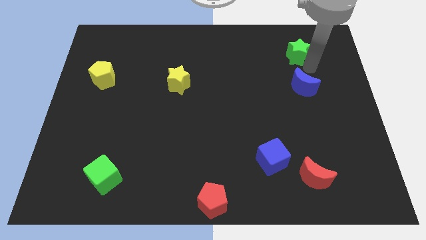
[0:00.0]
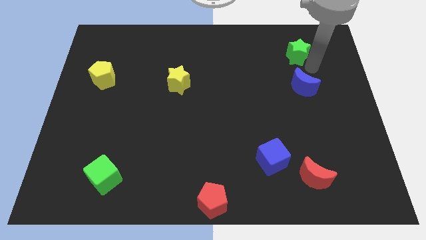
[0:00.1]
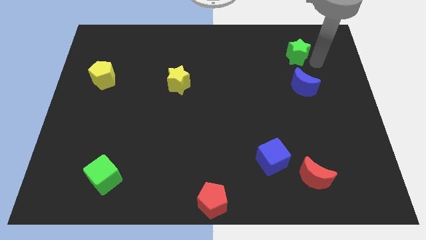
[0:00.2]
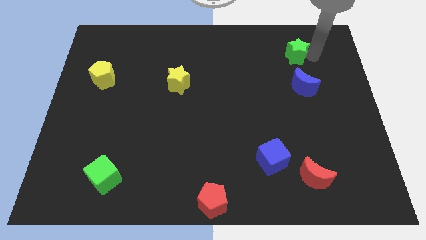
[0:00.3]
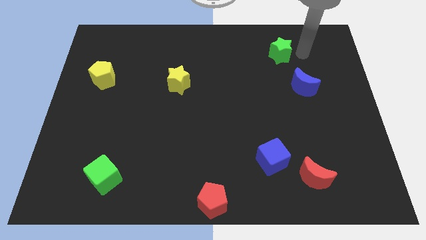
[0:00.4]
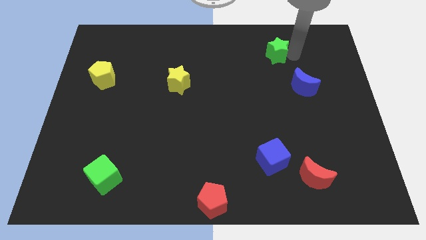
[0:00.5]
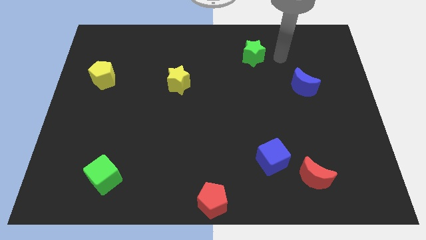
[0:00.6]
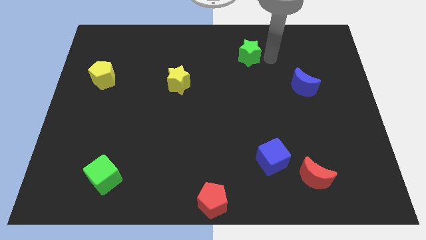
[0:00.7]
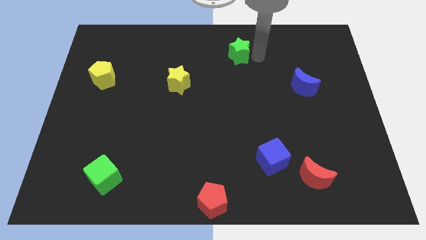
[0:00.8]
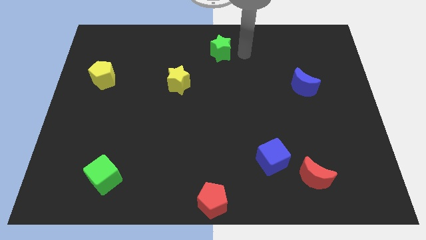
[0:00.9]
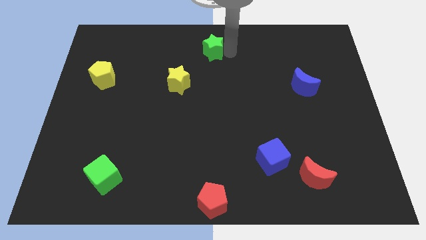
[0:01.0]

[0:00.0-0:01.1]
drag the green star to the top center of the table

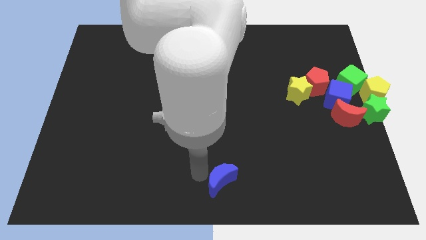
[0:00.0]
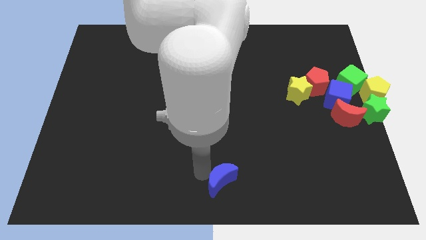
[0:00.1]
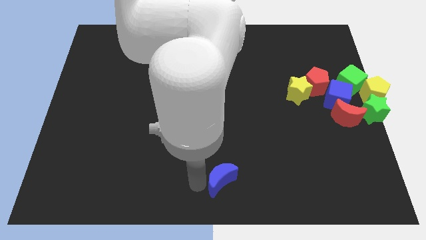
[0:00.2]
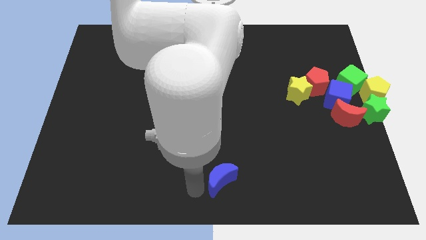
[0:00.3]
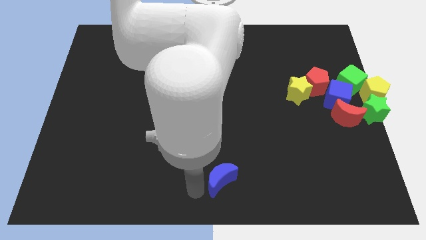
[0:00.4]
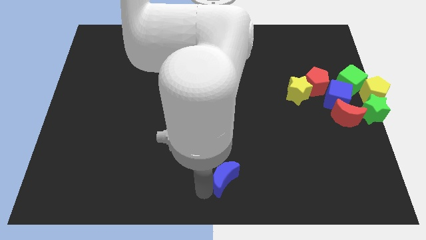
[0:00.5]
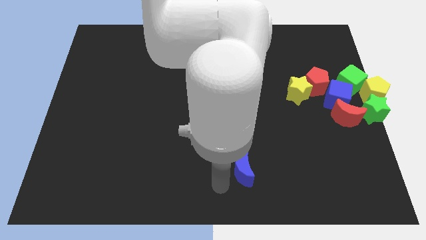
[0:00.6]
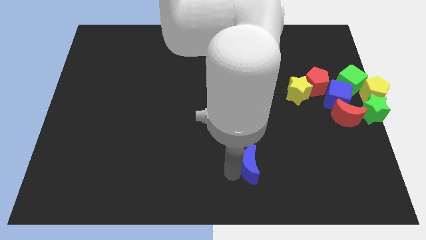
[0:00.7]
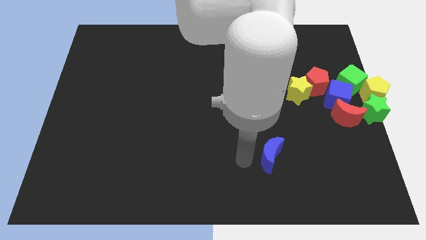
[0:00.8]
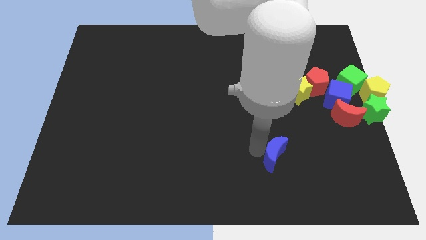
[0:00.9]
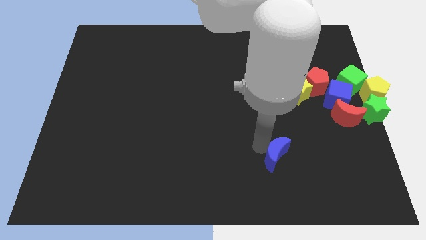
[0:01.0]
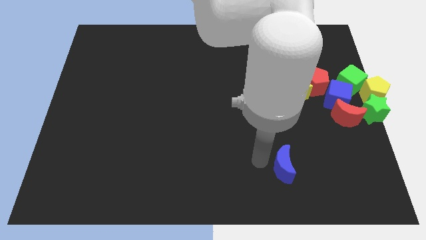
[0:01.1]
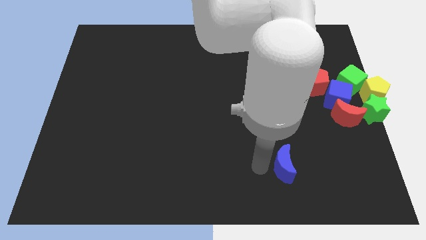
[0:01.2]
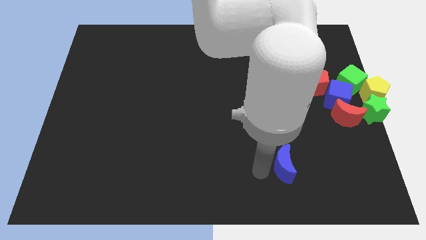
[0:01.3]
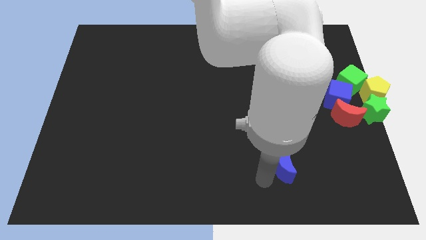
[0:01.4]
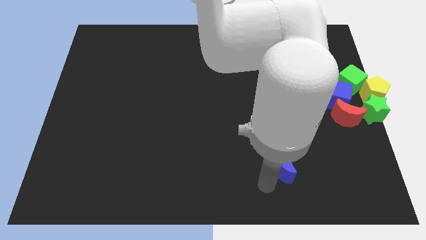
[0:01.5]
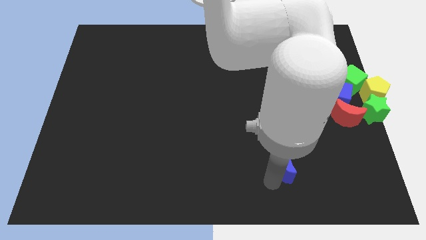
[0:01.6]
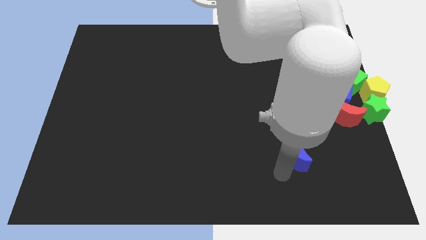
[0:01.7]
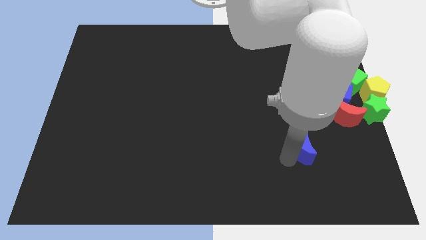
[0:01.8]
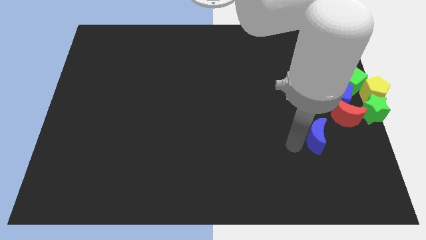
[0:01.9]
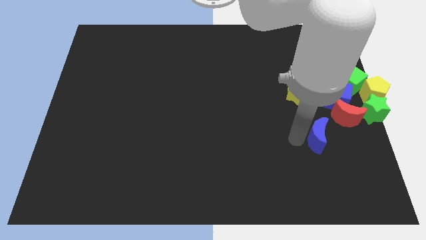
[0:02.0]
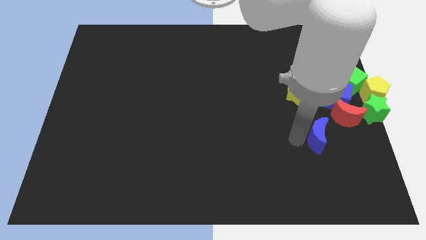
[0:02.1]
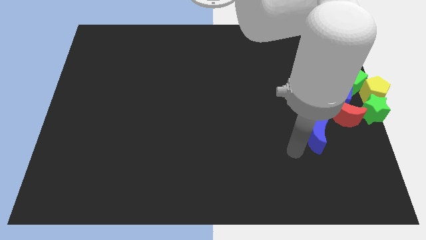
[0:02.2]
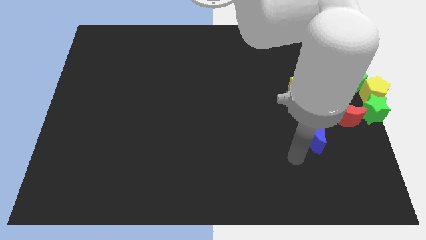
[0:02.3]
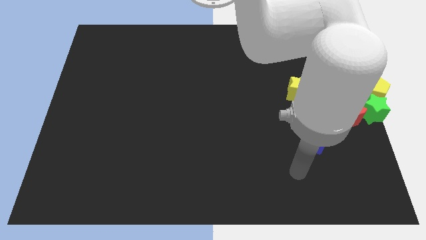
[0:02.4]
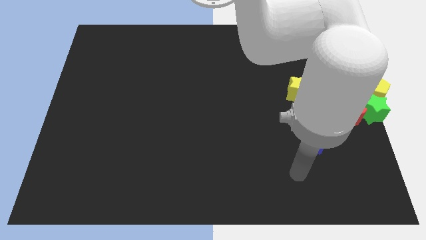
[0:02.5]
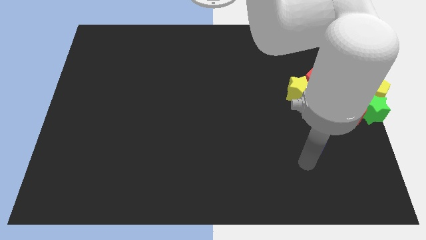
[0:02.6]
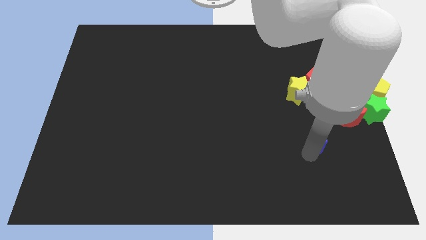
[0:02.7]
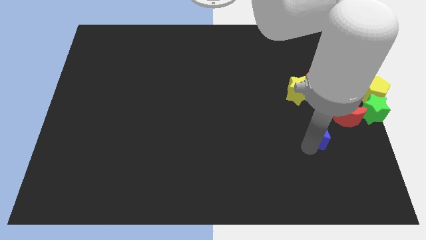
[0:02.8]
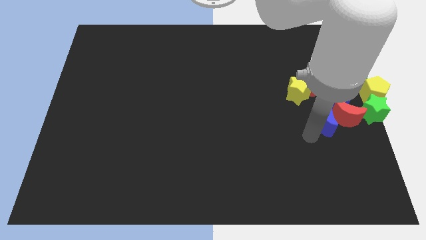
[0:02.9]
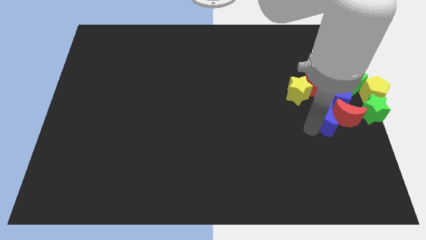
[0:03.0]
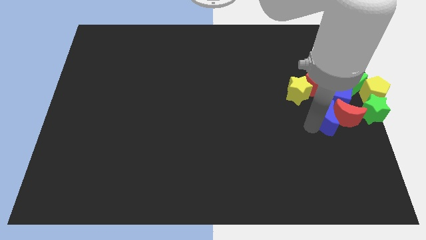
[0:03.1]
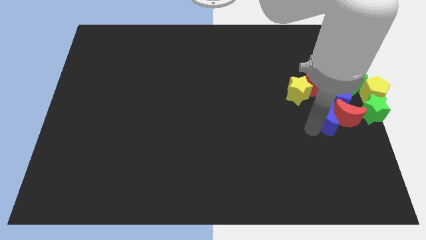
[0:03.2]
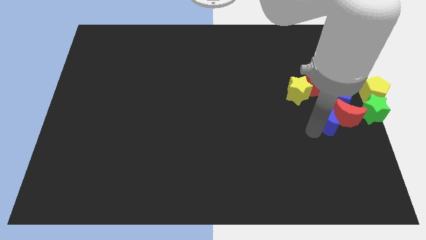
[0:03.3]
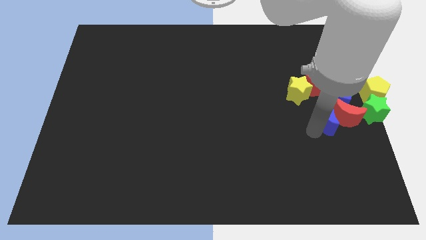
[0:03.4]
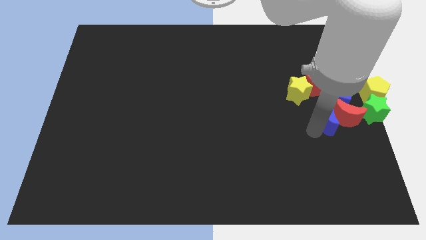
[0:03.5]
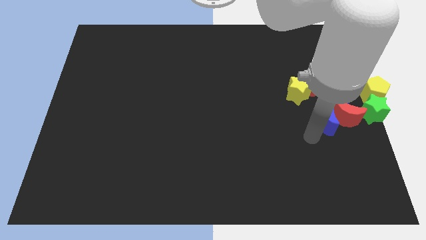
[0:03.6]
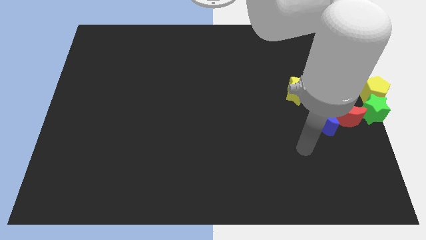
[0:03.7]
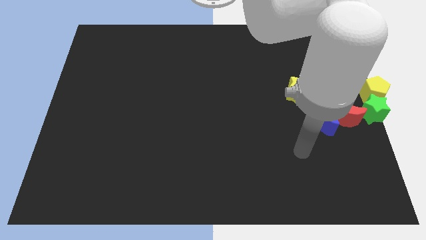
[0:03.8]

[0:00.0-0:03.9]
push the blue moon into the red moon

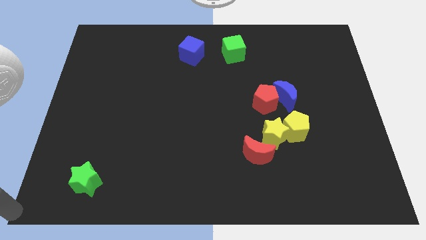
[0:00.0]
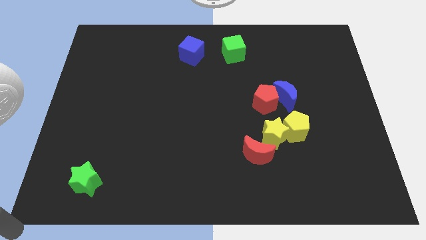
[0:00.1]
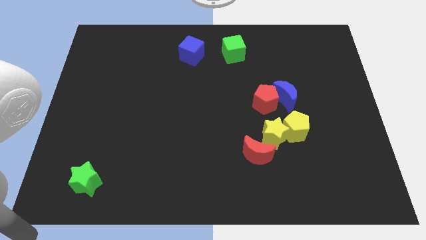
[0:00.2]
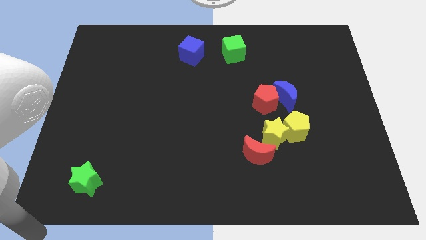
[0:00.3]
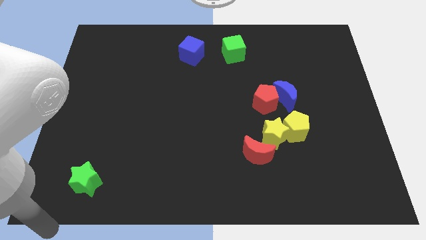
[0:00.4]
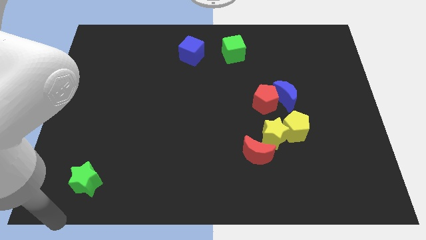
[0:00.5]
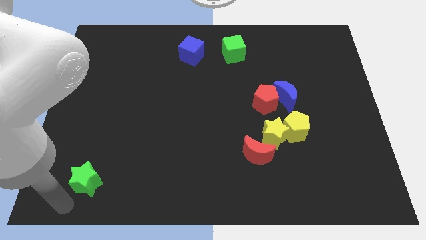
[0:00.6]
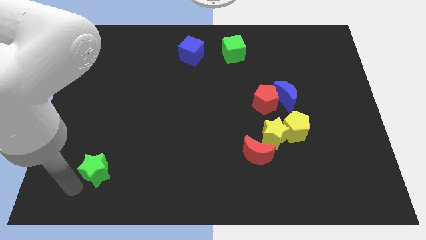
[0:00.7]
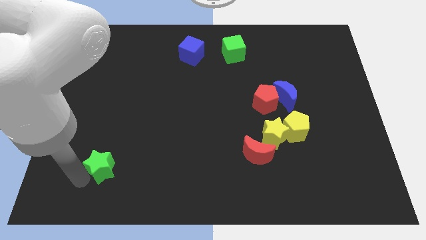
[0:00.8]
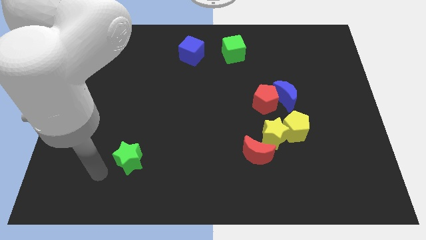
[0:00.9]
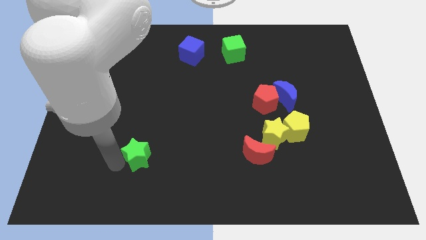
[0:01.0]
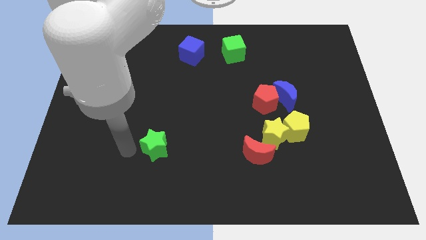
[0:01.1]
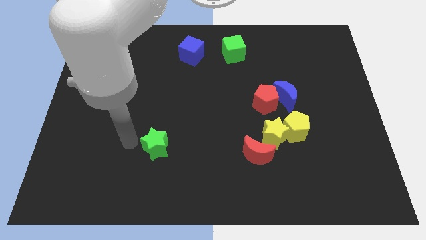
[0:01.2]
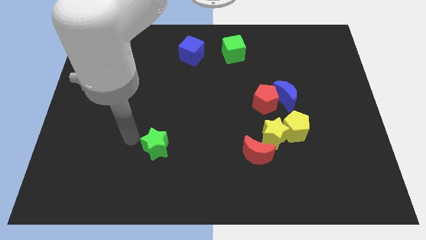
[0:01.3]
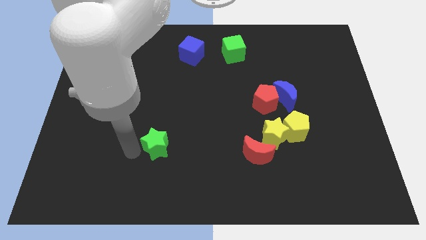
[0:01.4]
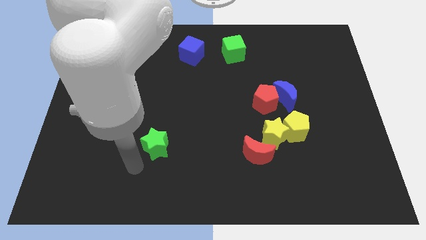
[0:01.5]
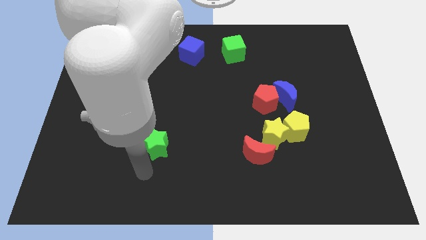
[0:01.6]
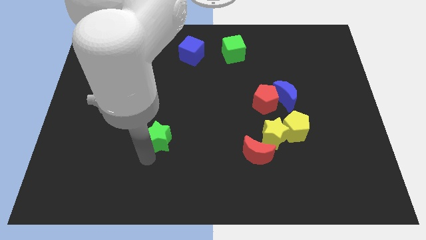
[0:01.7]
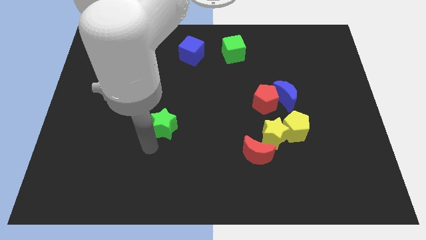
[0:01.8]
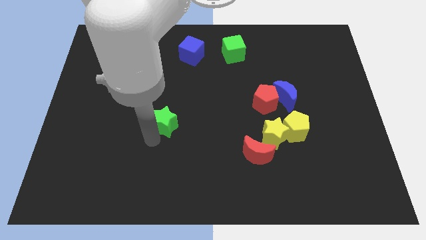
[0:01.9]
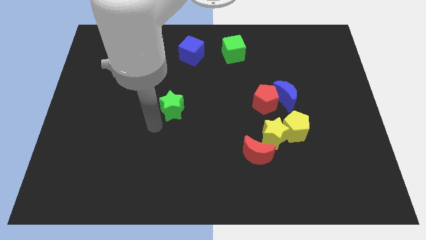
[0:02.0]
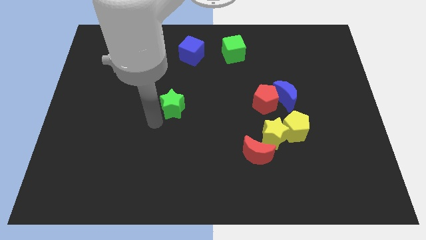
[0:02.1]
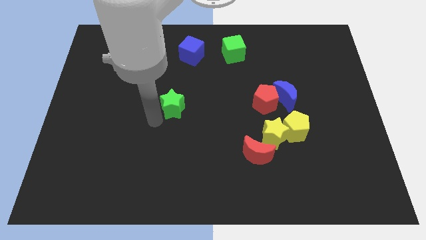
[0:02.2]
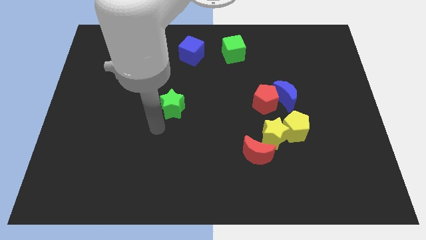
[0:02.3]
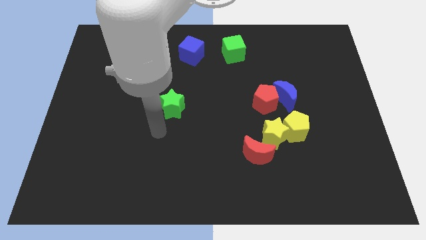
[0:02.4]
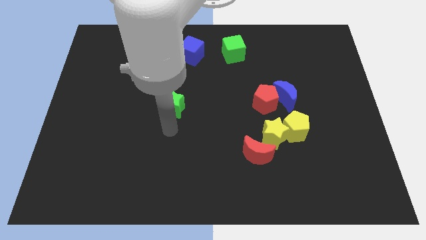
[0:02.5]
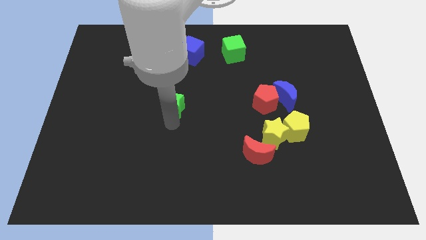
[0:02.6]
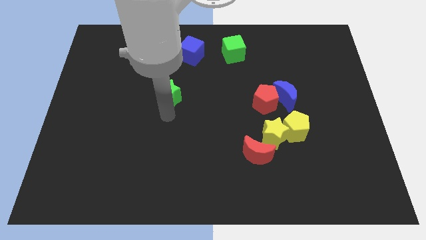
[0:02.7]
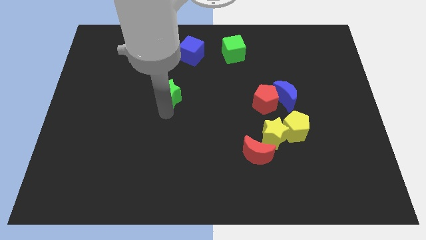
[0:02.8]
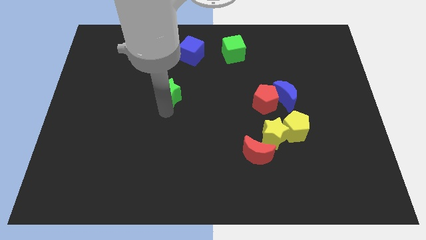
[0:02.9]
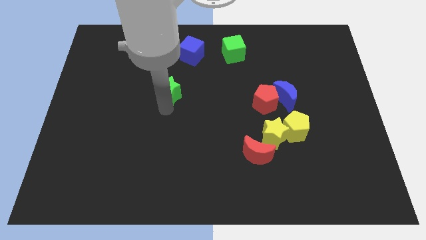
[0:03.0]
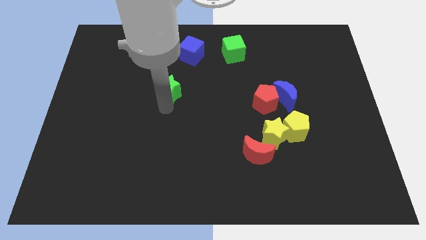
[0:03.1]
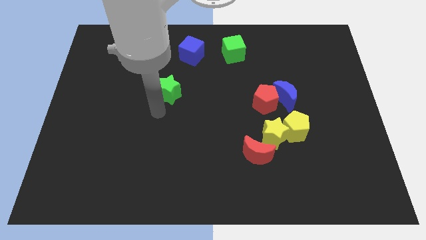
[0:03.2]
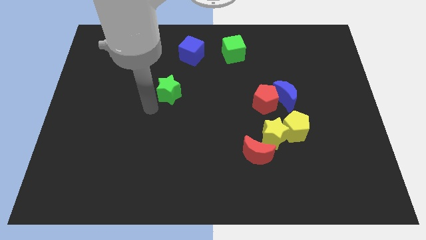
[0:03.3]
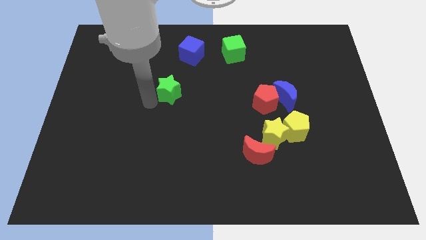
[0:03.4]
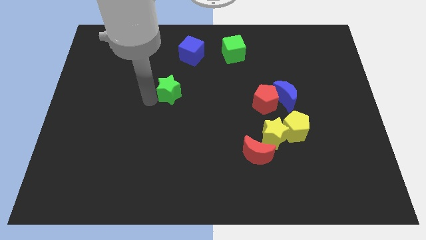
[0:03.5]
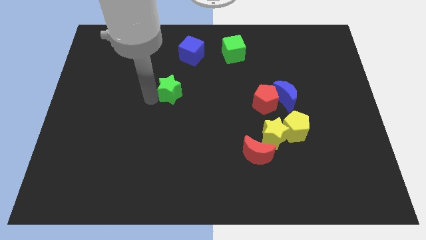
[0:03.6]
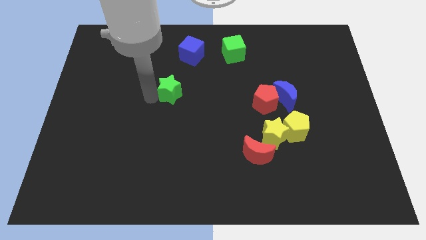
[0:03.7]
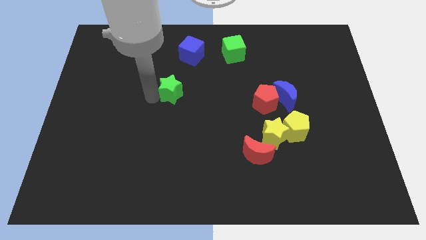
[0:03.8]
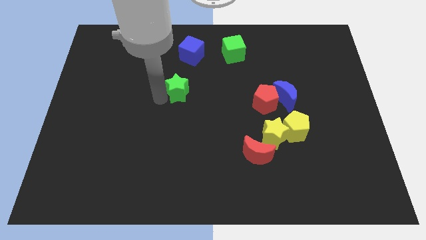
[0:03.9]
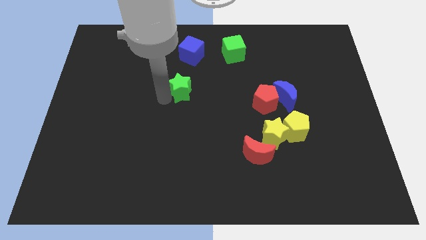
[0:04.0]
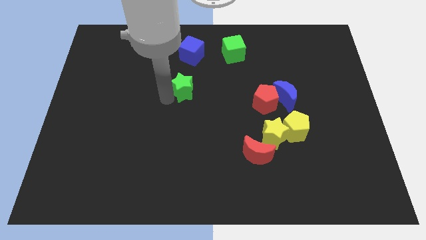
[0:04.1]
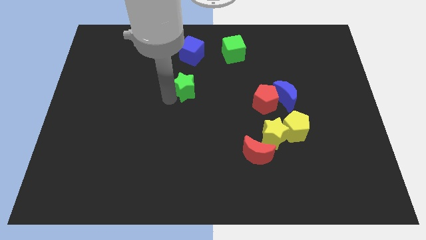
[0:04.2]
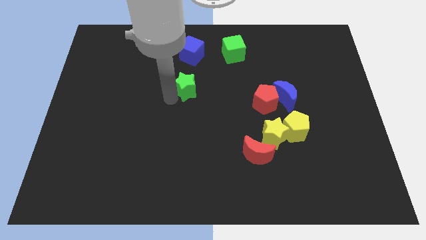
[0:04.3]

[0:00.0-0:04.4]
push the green star towards the center of the board
